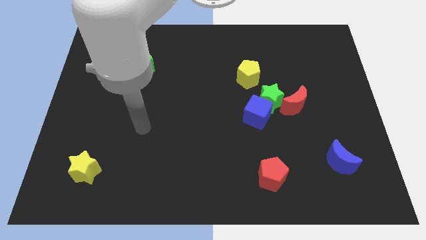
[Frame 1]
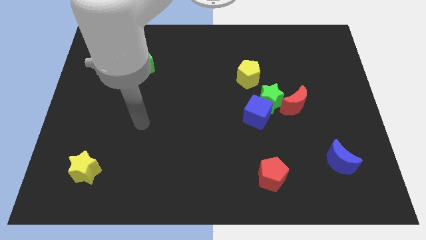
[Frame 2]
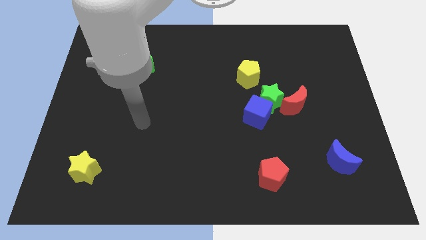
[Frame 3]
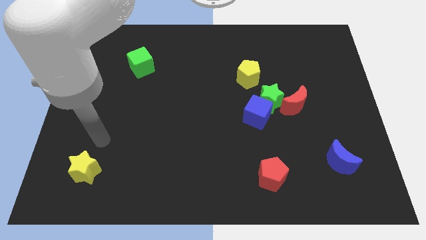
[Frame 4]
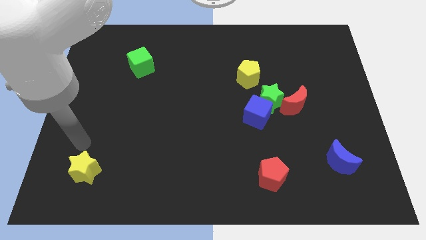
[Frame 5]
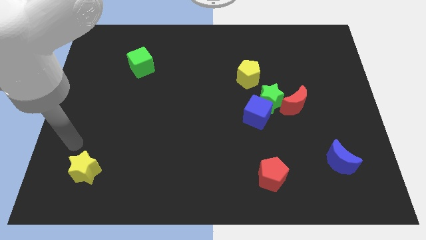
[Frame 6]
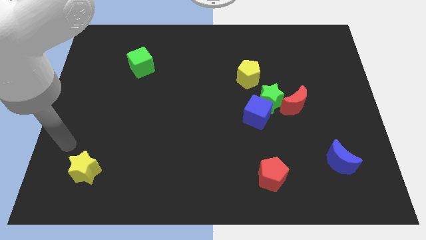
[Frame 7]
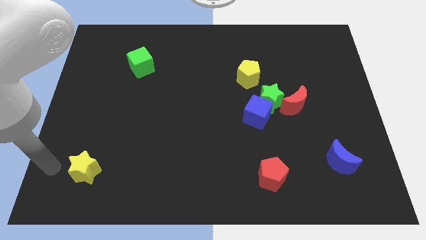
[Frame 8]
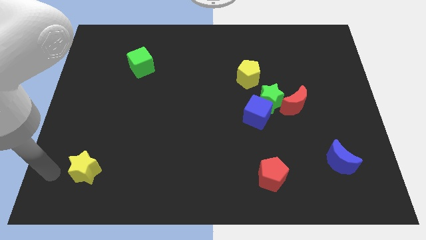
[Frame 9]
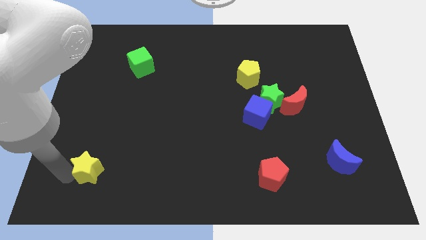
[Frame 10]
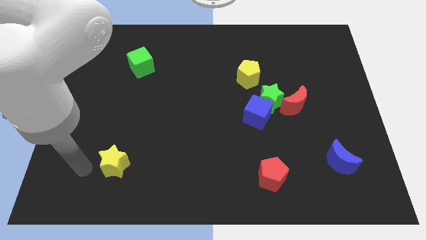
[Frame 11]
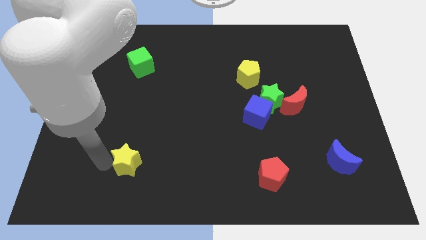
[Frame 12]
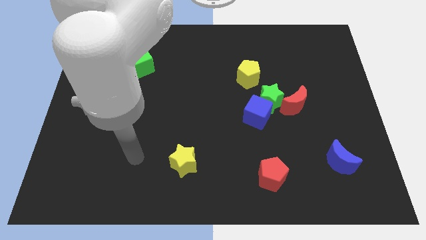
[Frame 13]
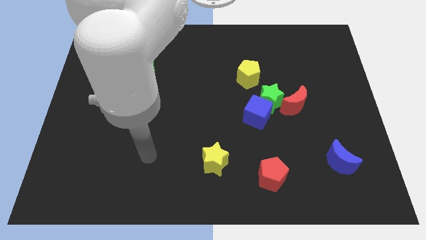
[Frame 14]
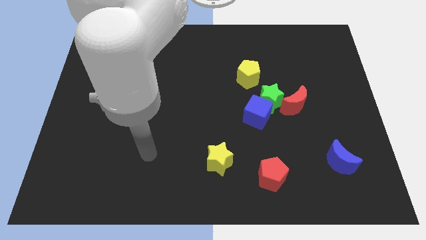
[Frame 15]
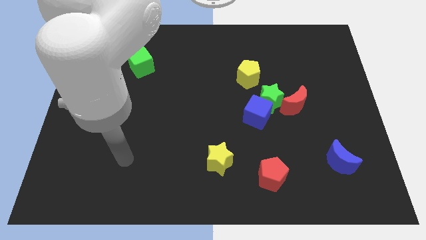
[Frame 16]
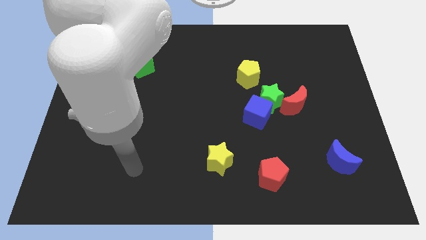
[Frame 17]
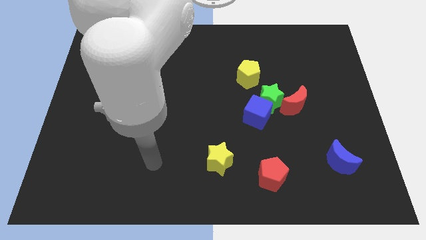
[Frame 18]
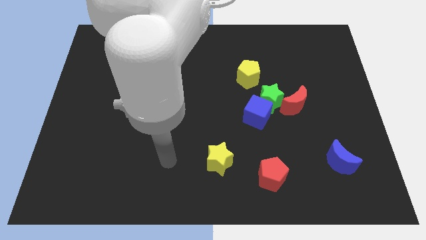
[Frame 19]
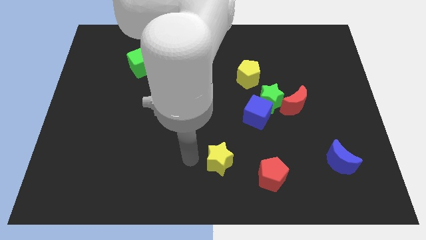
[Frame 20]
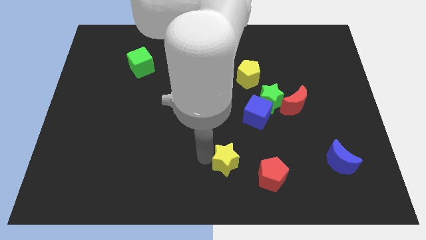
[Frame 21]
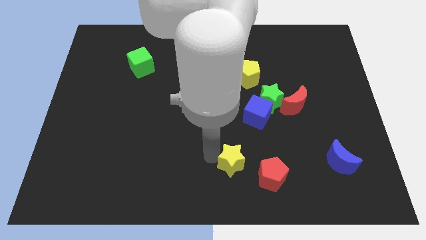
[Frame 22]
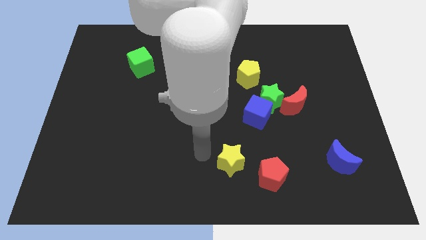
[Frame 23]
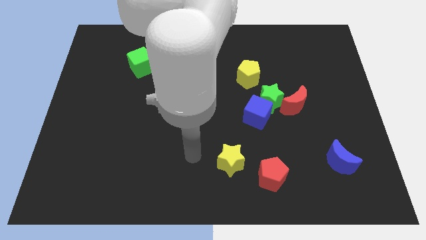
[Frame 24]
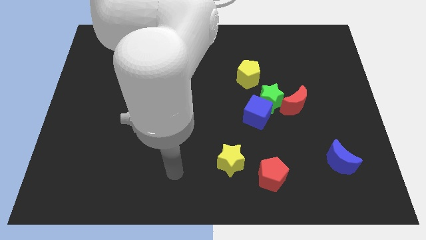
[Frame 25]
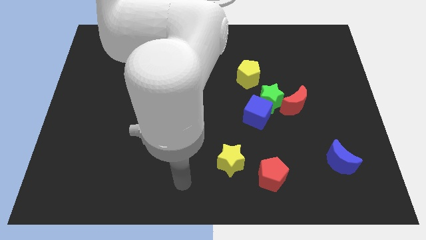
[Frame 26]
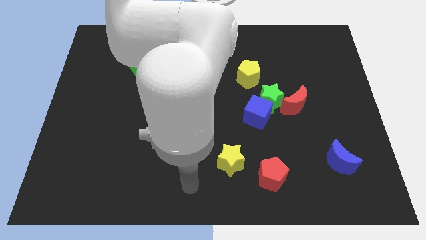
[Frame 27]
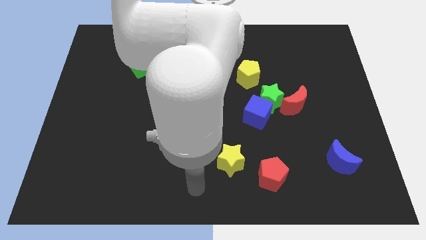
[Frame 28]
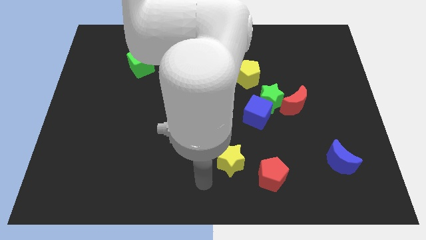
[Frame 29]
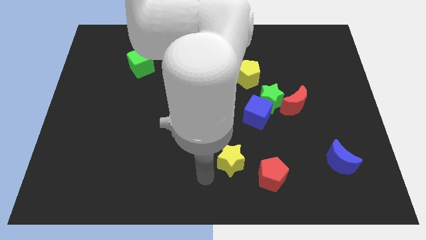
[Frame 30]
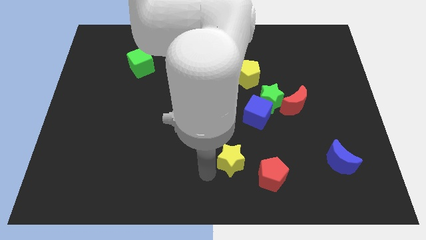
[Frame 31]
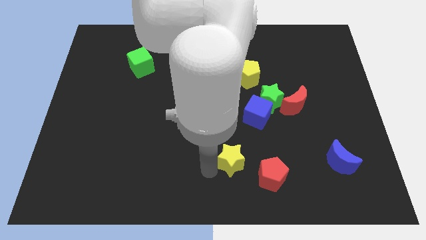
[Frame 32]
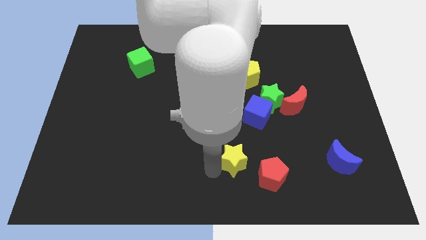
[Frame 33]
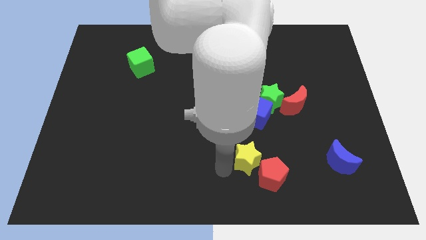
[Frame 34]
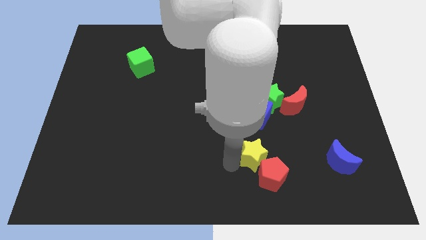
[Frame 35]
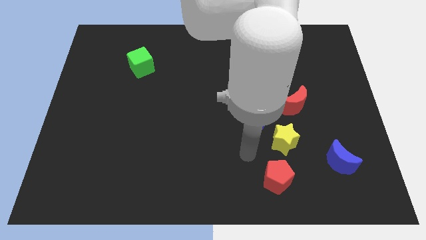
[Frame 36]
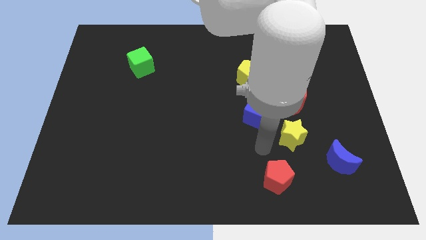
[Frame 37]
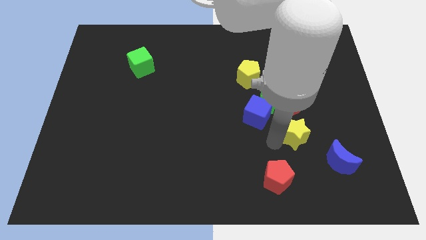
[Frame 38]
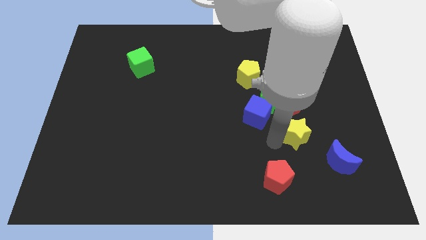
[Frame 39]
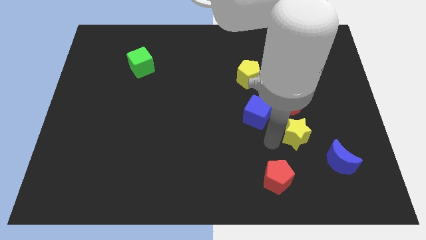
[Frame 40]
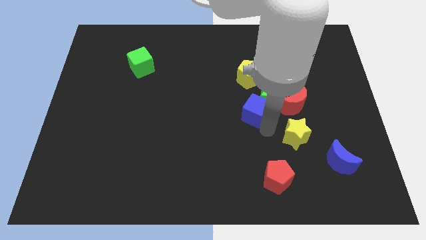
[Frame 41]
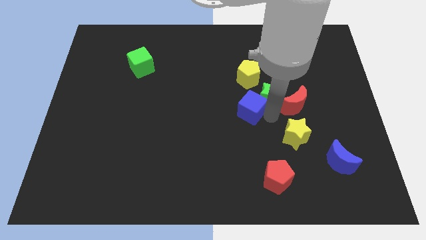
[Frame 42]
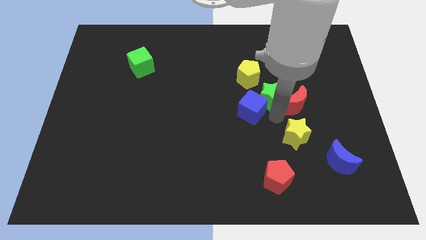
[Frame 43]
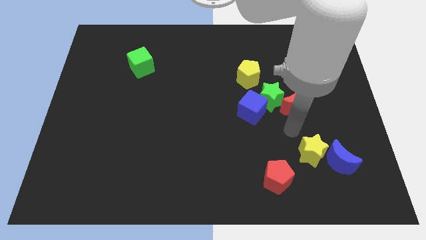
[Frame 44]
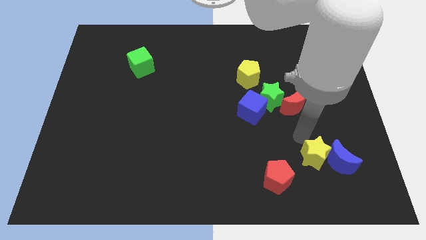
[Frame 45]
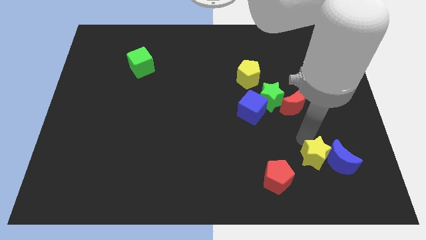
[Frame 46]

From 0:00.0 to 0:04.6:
slide the yellow star close to the blue moon

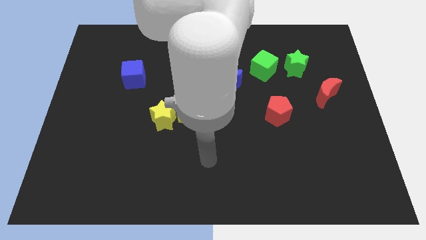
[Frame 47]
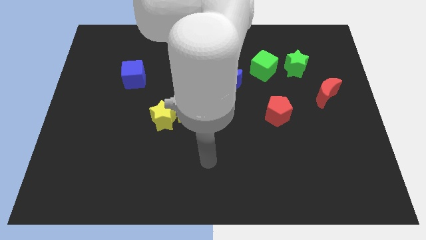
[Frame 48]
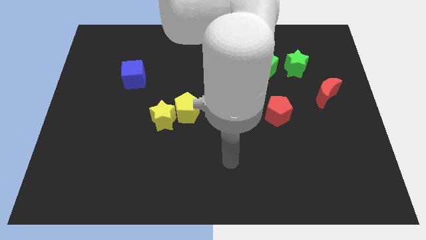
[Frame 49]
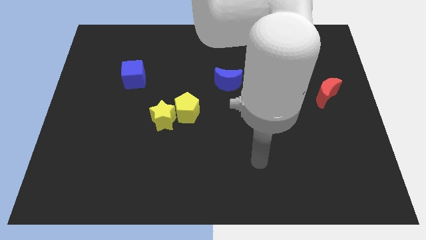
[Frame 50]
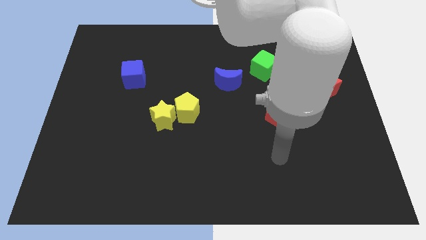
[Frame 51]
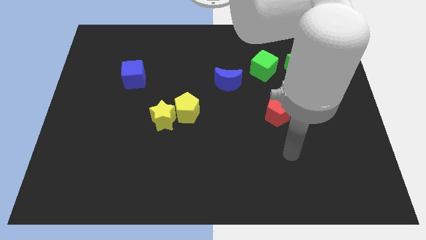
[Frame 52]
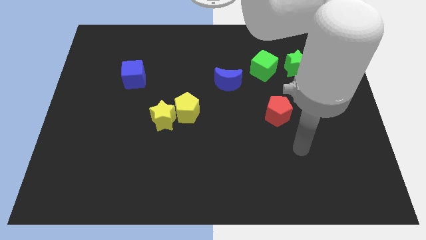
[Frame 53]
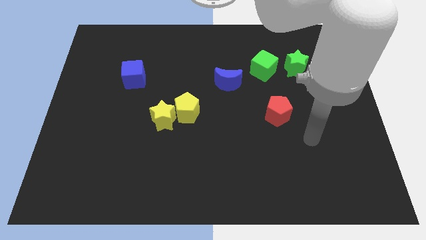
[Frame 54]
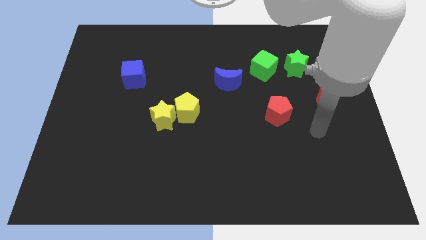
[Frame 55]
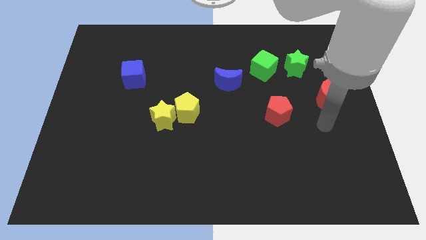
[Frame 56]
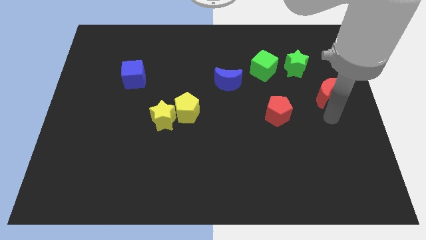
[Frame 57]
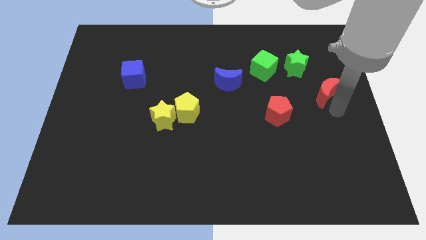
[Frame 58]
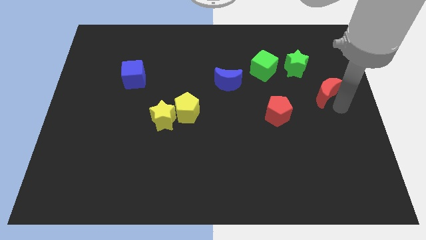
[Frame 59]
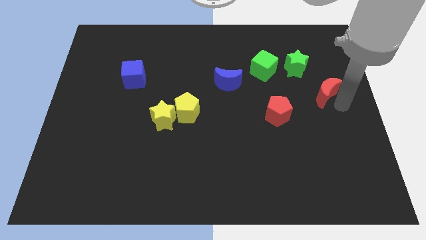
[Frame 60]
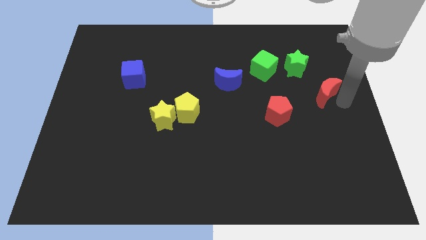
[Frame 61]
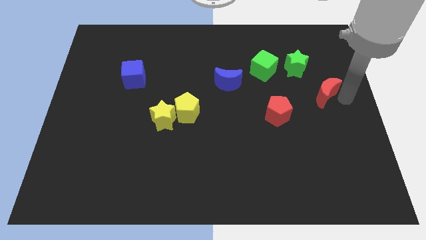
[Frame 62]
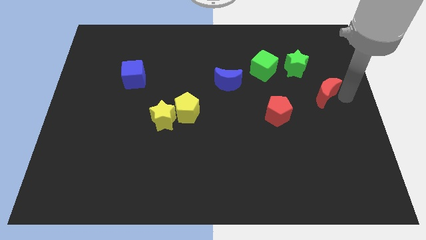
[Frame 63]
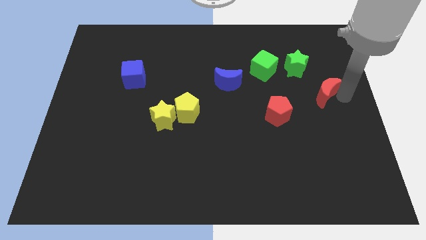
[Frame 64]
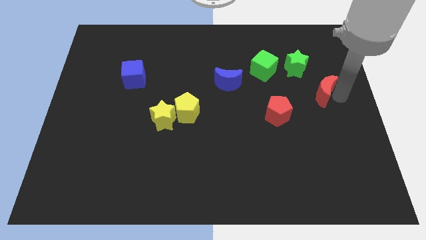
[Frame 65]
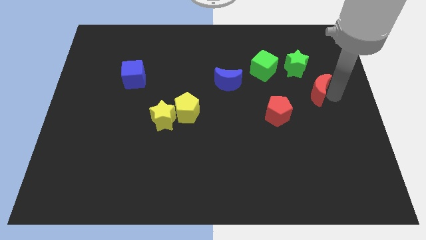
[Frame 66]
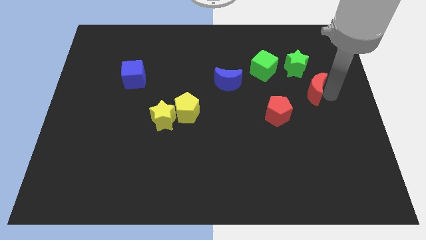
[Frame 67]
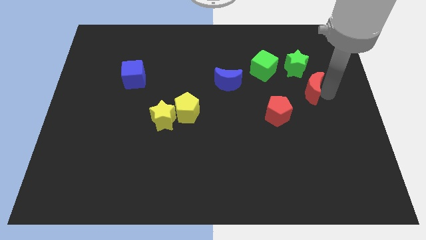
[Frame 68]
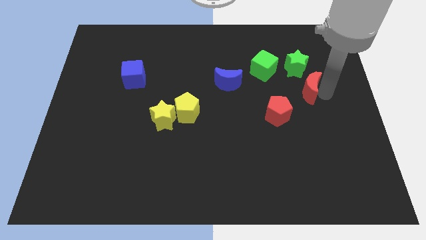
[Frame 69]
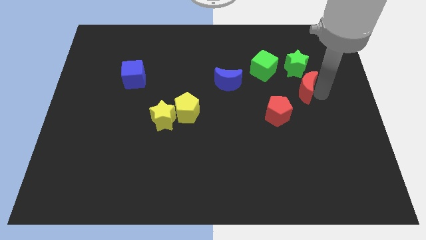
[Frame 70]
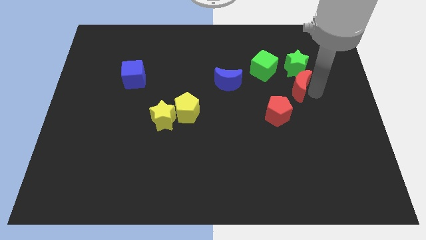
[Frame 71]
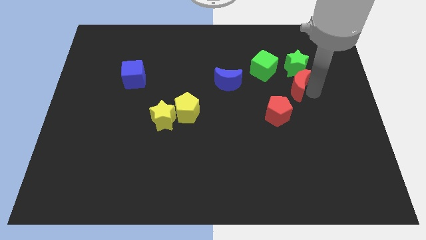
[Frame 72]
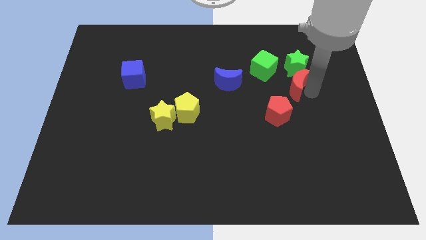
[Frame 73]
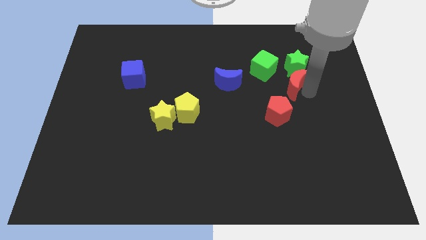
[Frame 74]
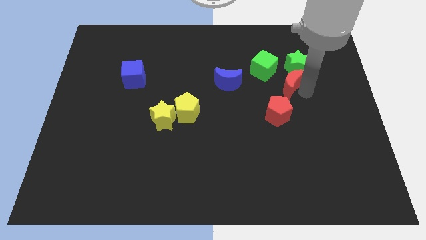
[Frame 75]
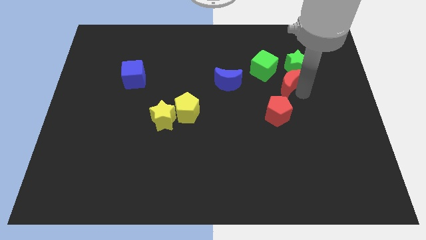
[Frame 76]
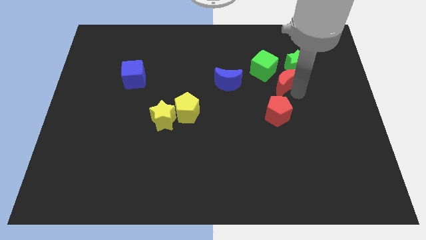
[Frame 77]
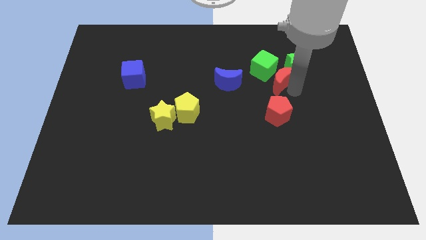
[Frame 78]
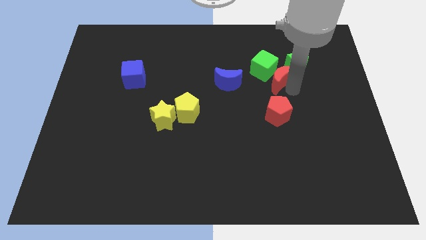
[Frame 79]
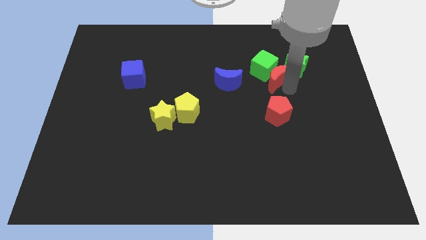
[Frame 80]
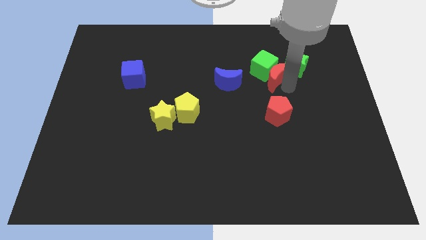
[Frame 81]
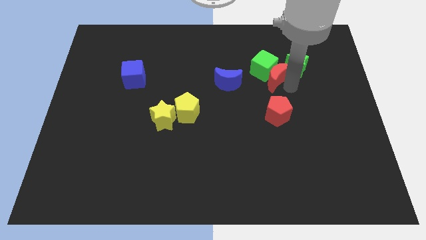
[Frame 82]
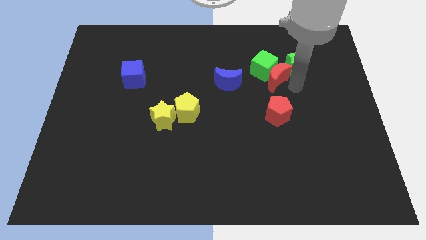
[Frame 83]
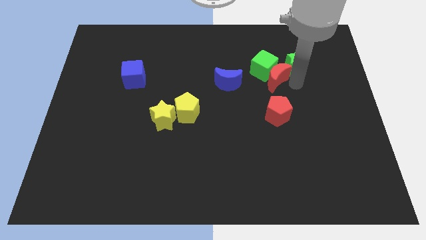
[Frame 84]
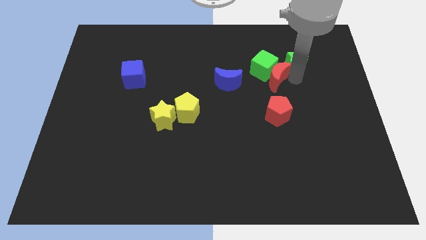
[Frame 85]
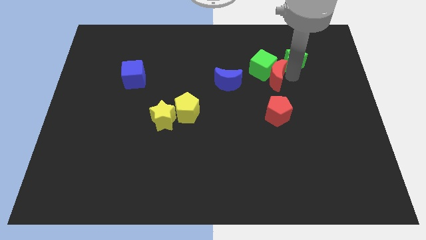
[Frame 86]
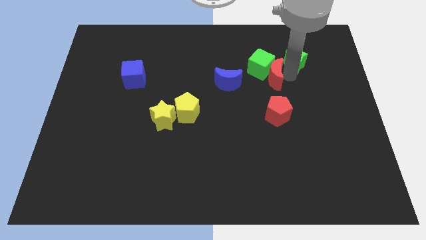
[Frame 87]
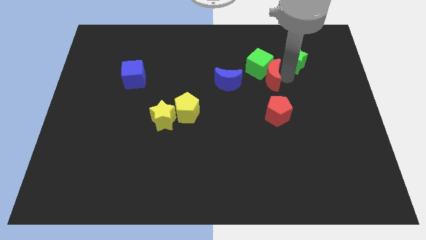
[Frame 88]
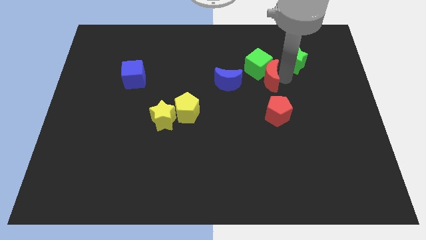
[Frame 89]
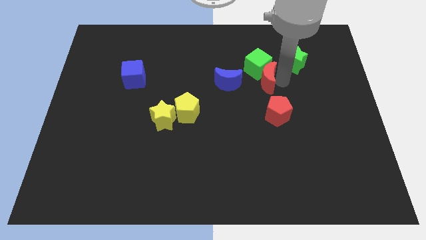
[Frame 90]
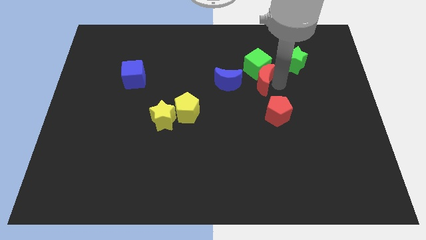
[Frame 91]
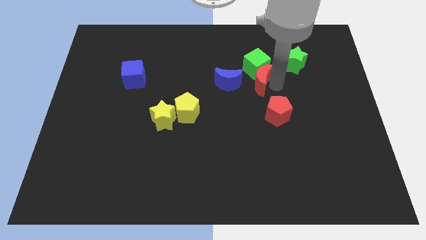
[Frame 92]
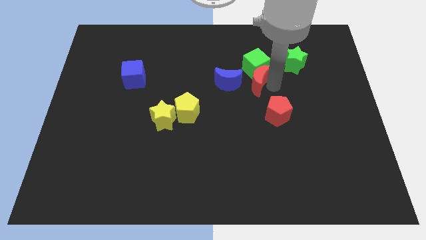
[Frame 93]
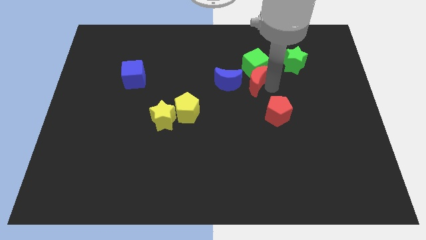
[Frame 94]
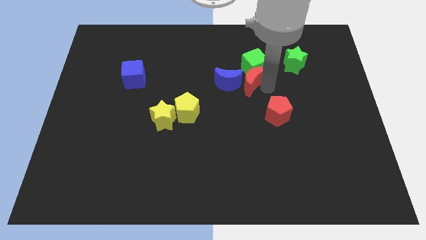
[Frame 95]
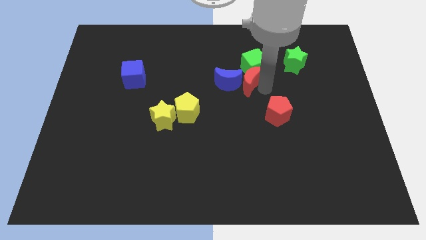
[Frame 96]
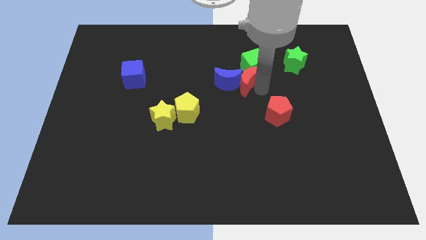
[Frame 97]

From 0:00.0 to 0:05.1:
push the red moon close to the blue moon
